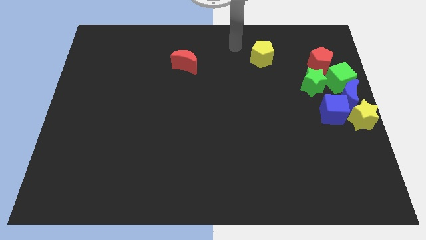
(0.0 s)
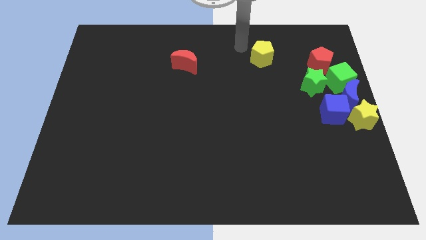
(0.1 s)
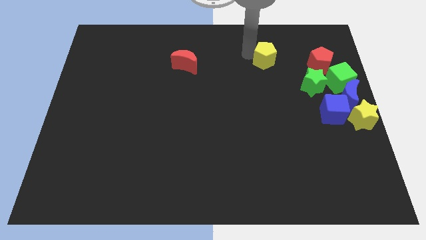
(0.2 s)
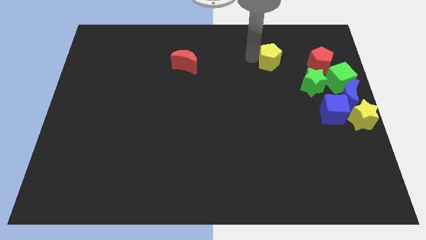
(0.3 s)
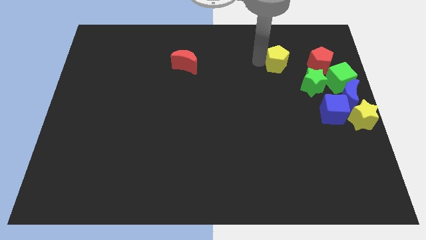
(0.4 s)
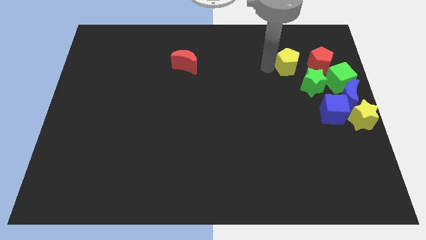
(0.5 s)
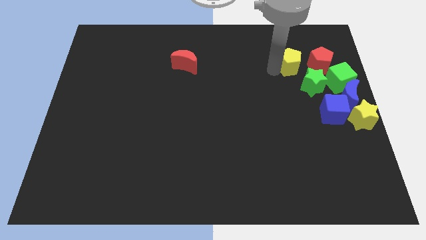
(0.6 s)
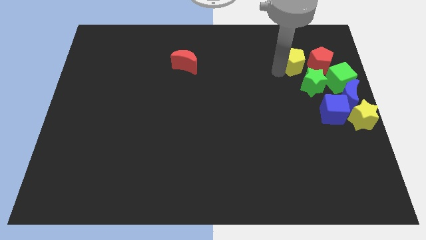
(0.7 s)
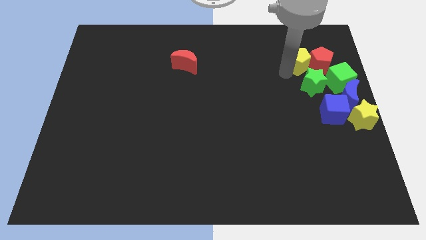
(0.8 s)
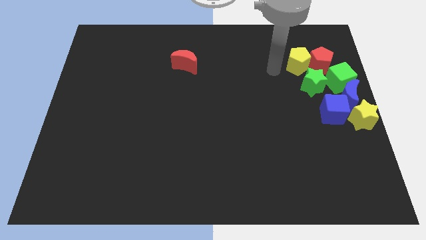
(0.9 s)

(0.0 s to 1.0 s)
move the yellow pentagon left to the red pentagon

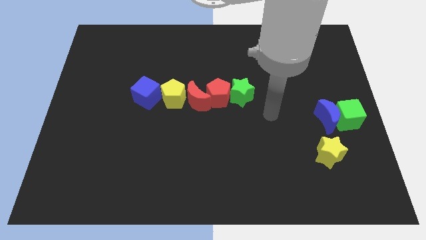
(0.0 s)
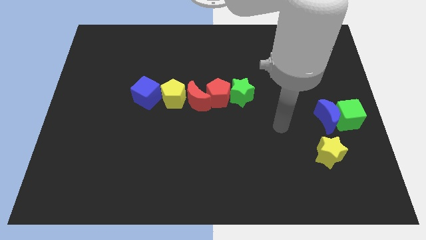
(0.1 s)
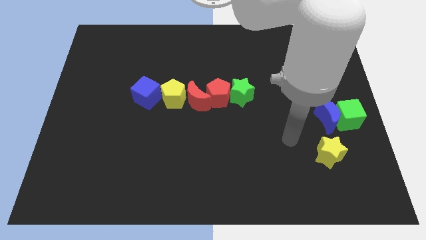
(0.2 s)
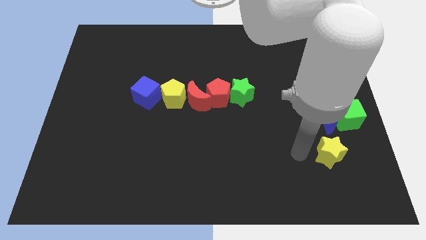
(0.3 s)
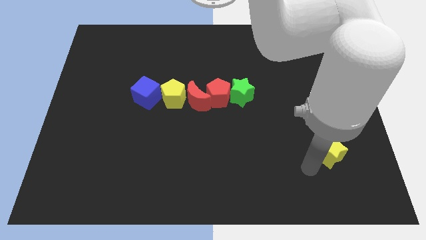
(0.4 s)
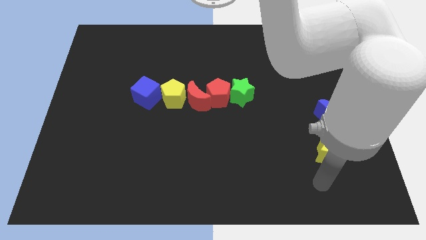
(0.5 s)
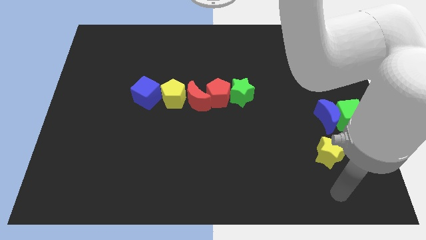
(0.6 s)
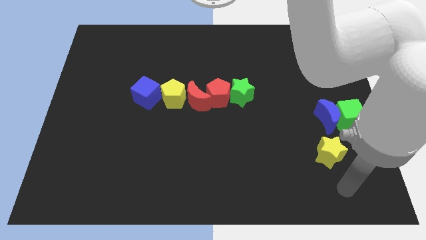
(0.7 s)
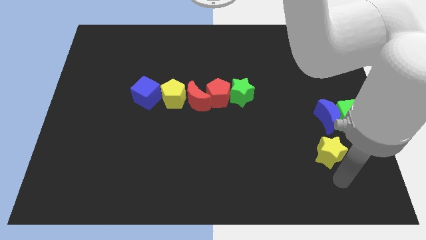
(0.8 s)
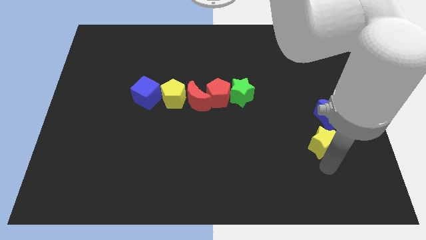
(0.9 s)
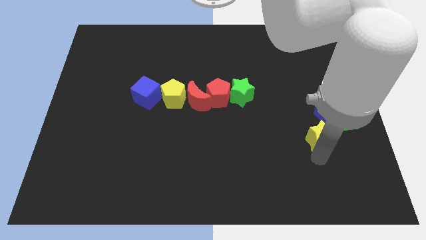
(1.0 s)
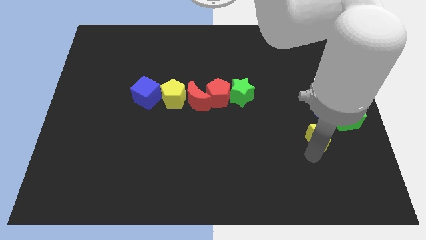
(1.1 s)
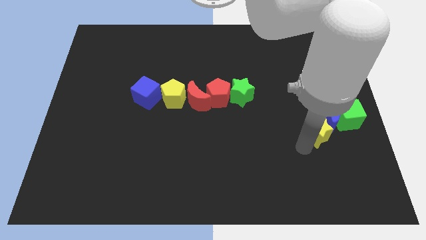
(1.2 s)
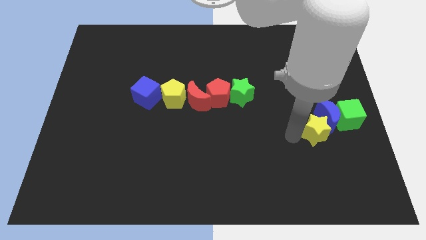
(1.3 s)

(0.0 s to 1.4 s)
move the yellow star towards the blue crescent

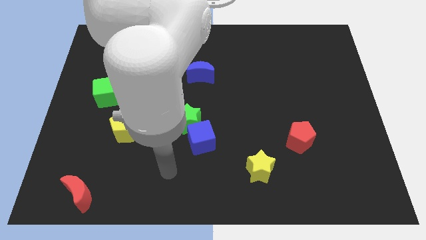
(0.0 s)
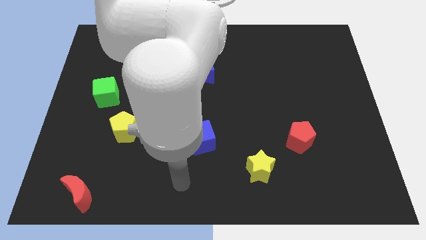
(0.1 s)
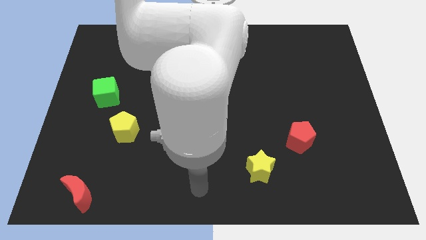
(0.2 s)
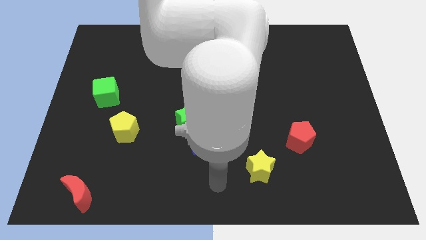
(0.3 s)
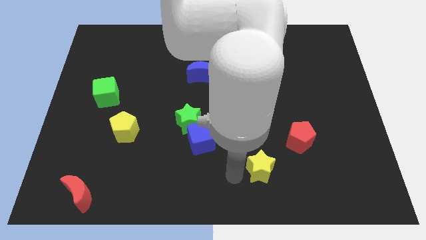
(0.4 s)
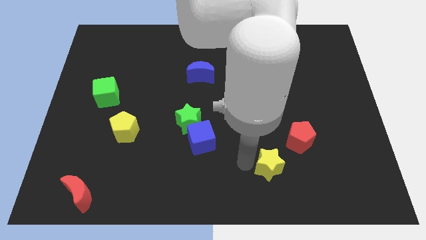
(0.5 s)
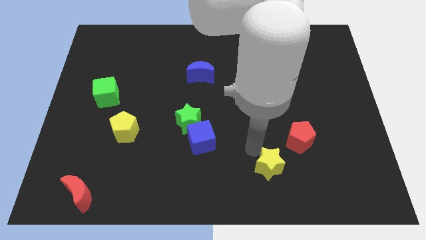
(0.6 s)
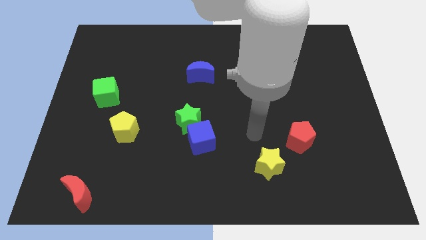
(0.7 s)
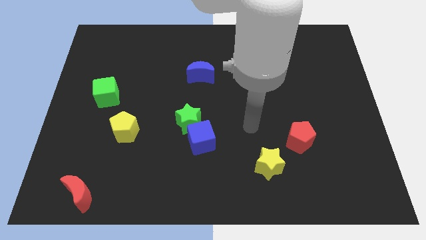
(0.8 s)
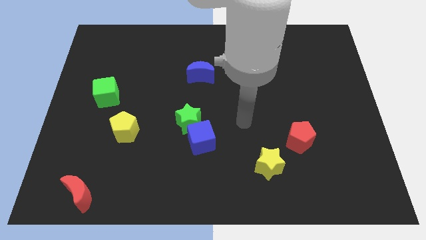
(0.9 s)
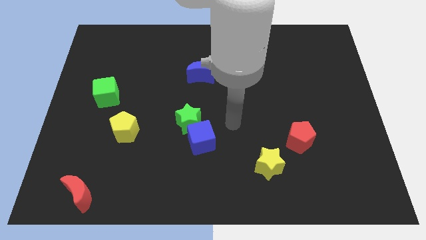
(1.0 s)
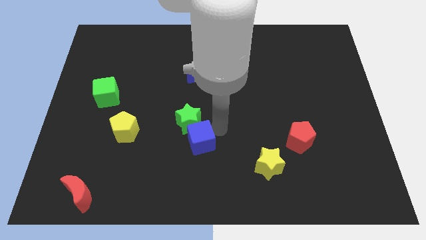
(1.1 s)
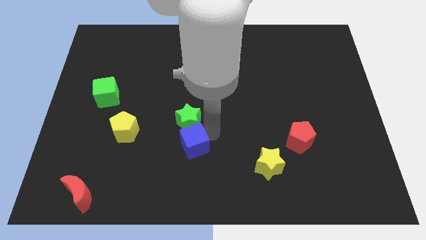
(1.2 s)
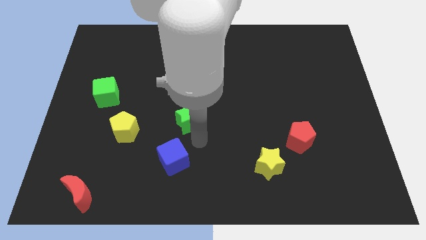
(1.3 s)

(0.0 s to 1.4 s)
move blue cube slightly down

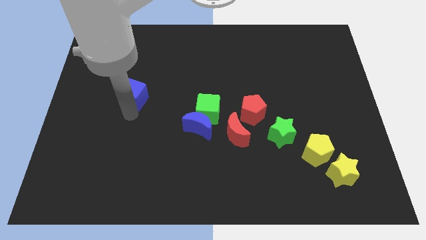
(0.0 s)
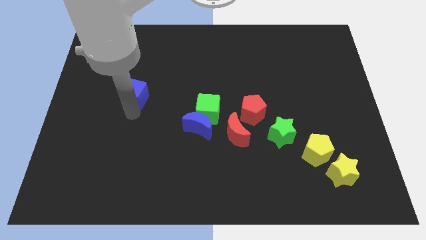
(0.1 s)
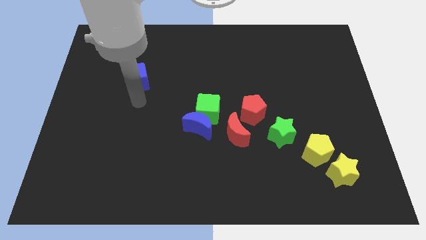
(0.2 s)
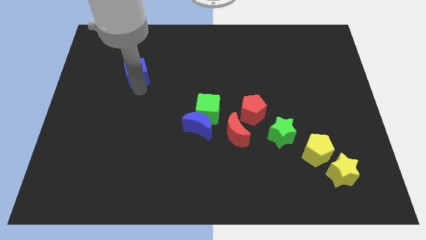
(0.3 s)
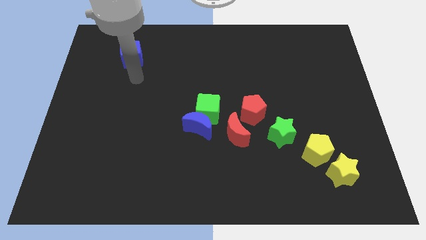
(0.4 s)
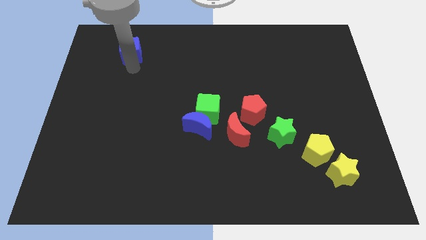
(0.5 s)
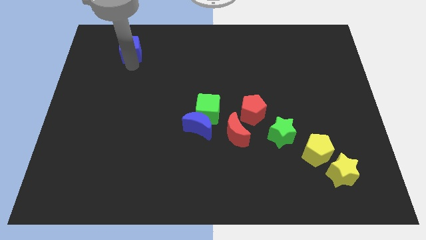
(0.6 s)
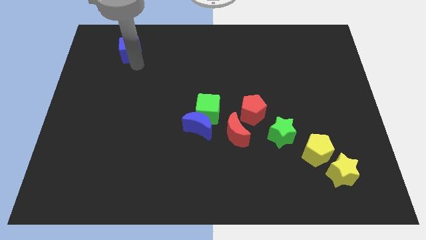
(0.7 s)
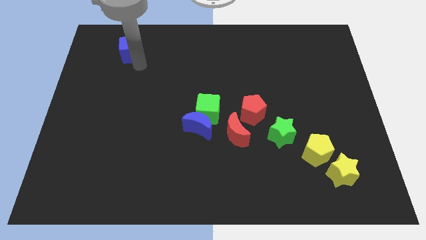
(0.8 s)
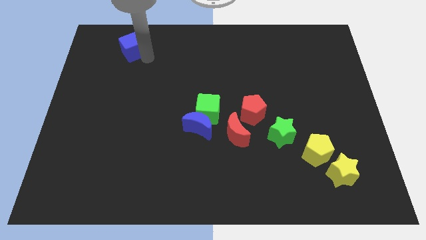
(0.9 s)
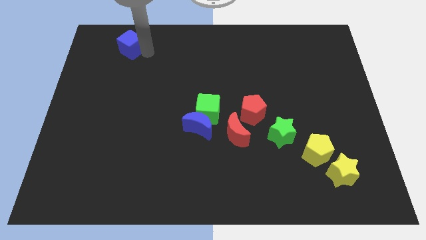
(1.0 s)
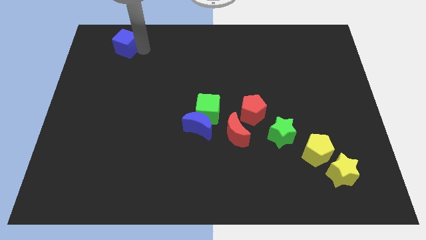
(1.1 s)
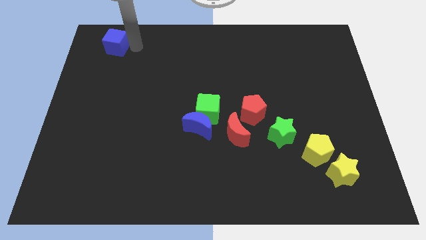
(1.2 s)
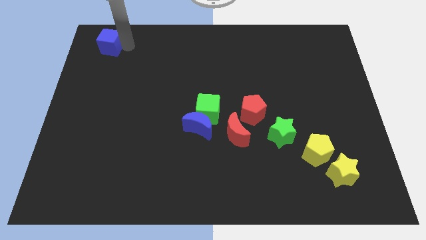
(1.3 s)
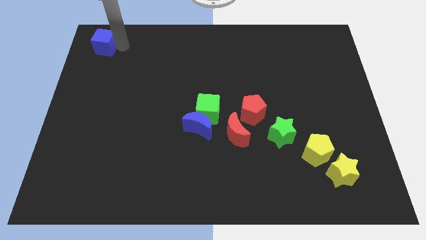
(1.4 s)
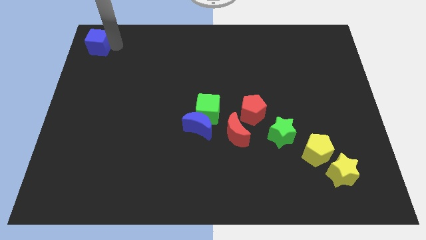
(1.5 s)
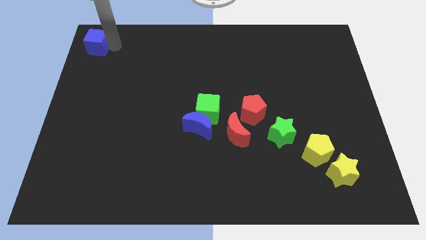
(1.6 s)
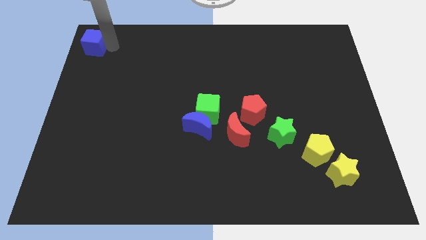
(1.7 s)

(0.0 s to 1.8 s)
push the blue cube to the top left side of the board

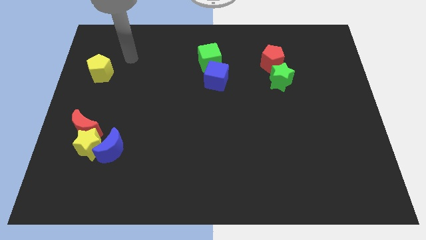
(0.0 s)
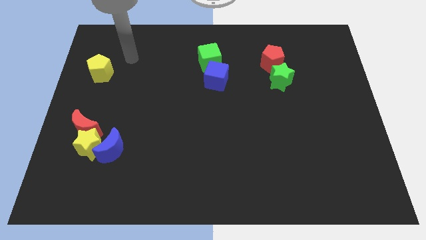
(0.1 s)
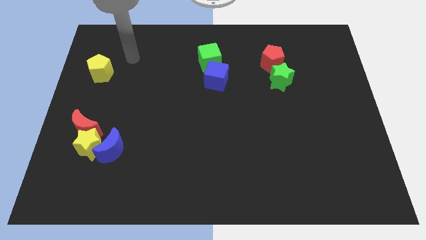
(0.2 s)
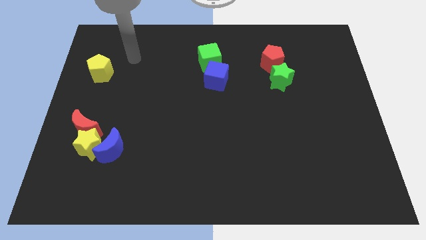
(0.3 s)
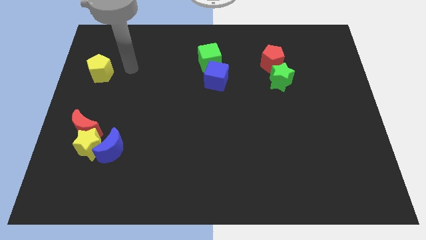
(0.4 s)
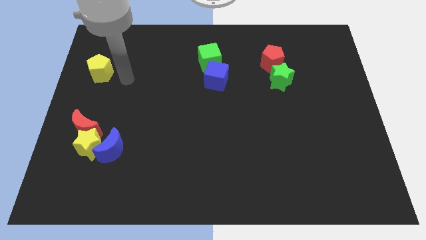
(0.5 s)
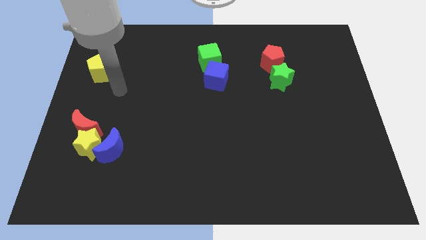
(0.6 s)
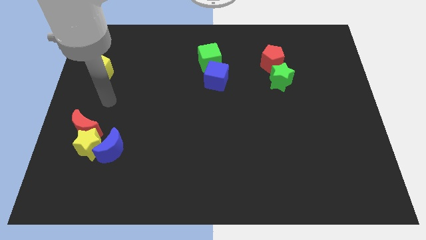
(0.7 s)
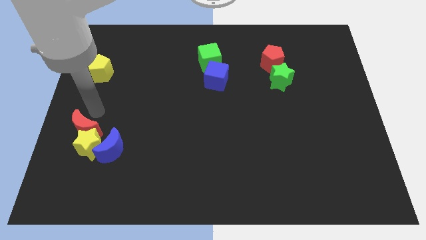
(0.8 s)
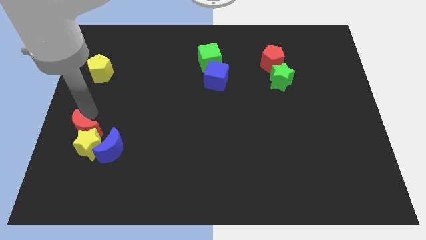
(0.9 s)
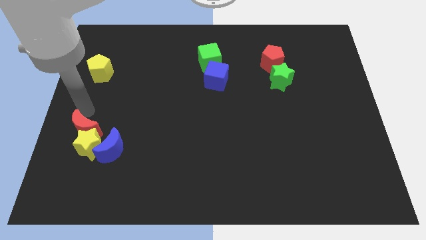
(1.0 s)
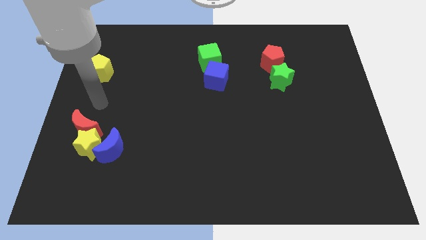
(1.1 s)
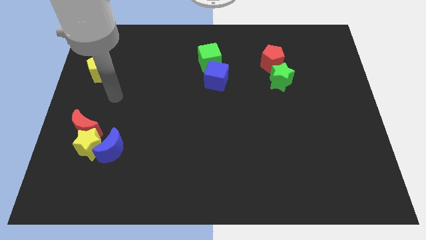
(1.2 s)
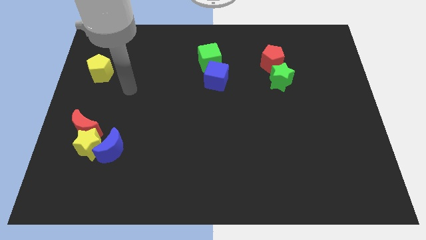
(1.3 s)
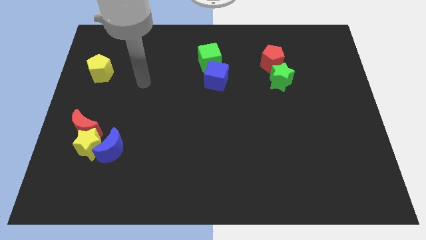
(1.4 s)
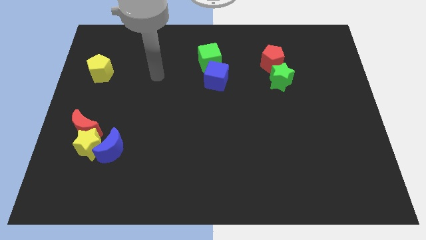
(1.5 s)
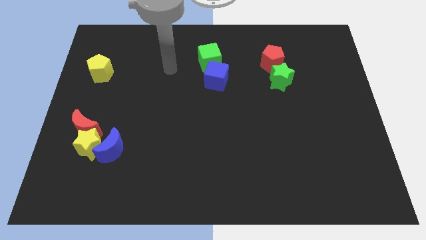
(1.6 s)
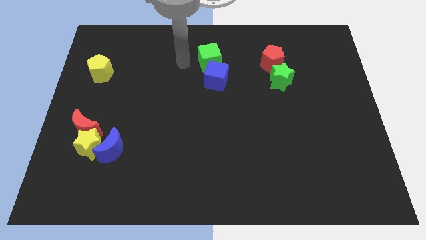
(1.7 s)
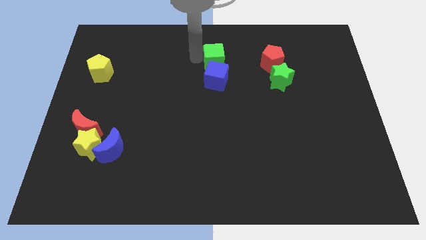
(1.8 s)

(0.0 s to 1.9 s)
place your arm to the left of green cube

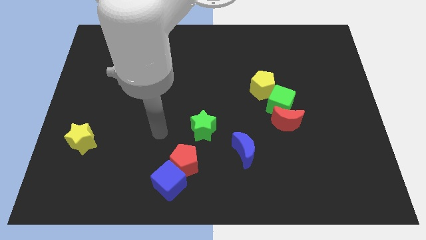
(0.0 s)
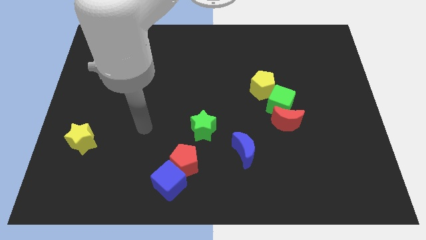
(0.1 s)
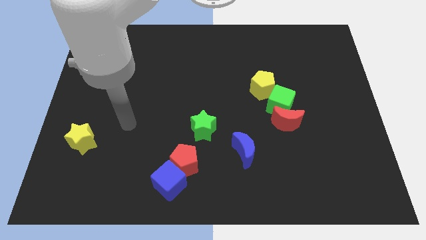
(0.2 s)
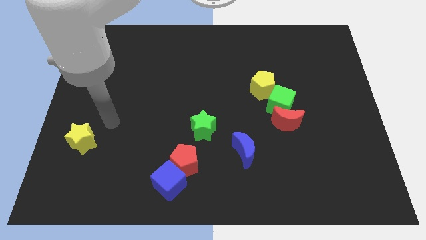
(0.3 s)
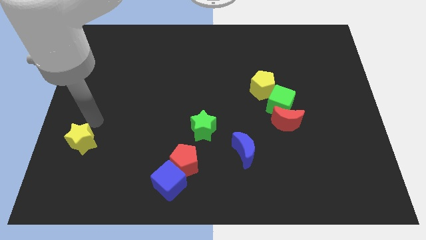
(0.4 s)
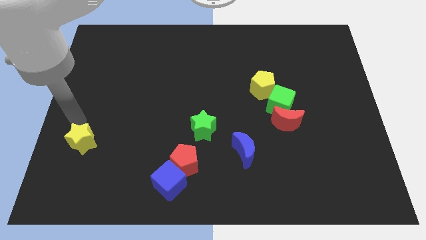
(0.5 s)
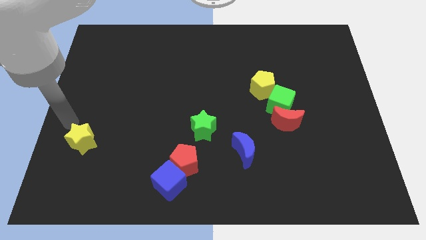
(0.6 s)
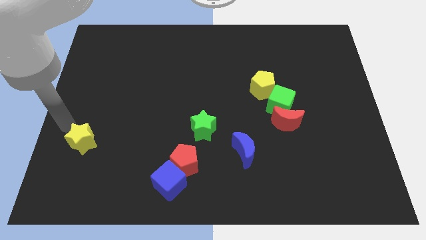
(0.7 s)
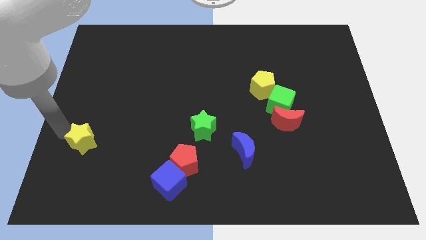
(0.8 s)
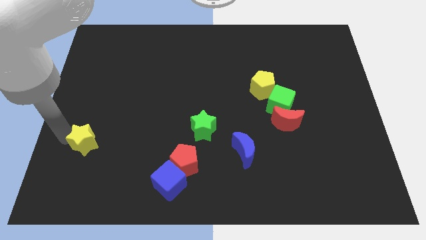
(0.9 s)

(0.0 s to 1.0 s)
move arm near yellow star

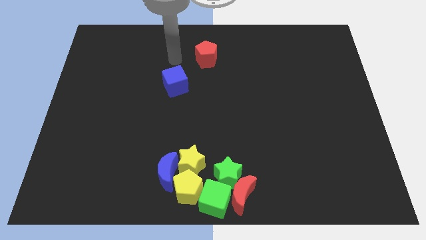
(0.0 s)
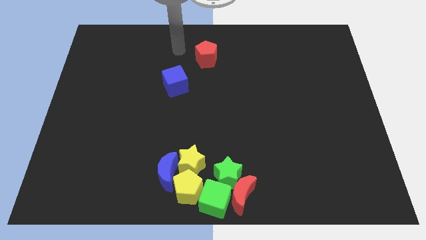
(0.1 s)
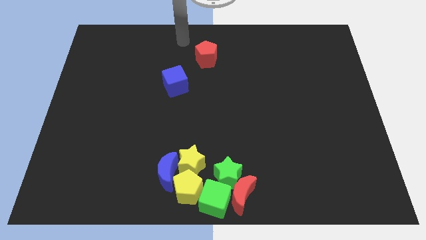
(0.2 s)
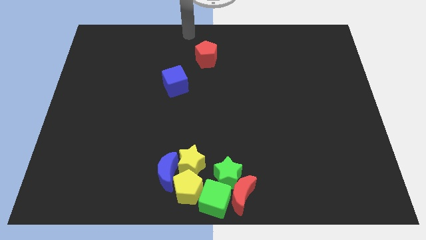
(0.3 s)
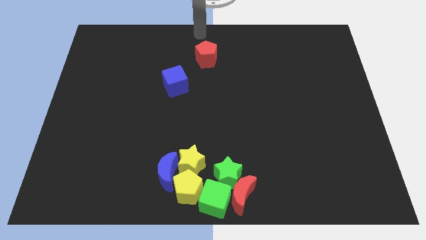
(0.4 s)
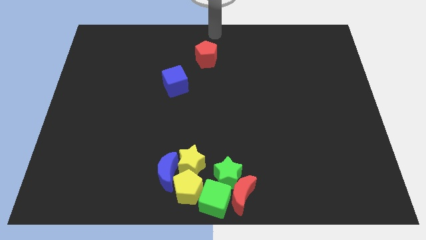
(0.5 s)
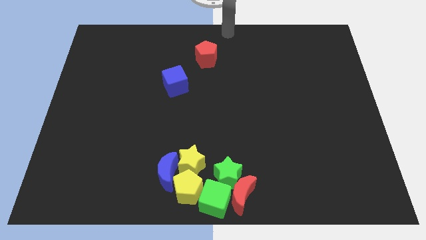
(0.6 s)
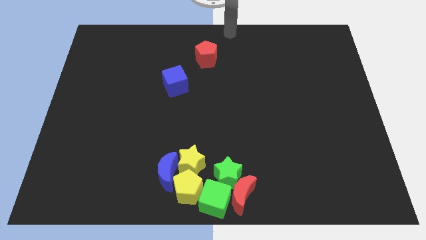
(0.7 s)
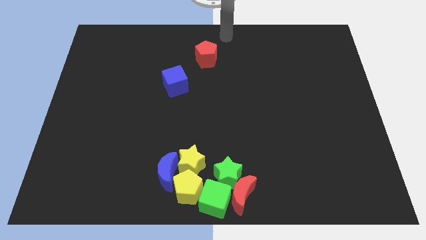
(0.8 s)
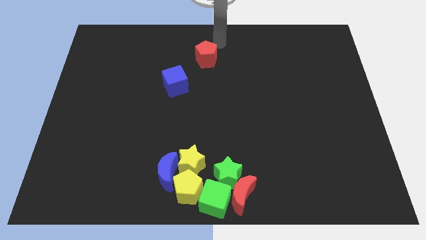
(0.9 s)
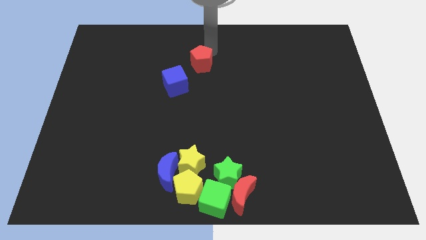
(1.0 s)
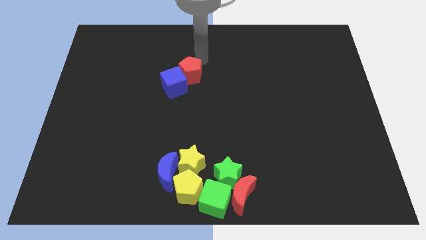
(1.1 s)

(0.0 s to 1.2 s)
place the red pentagon at the top right side of the blue cube
